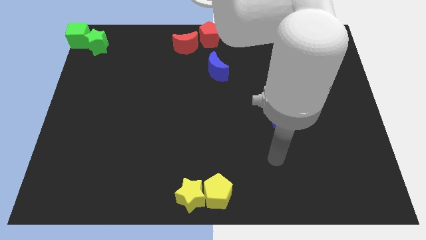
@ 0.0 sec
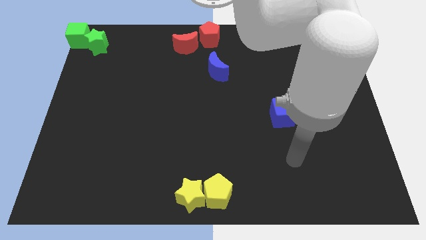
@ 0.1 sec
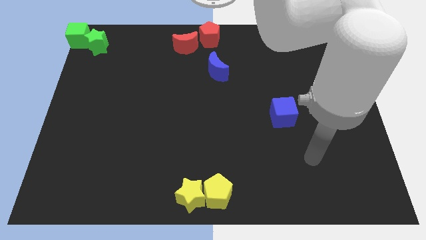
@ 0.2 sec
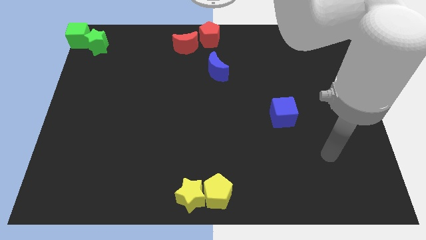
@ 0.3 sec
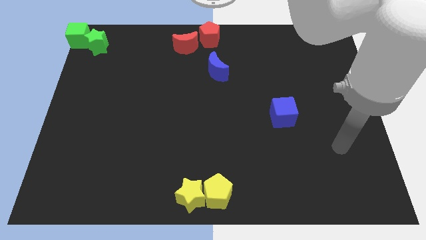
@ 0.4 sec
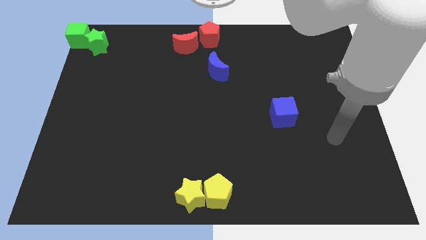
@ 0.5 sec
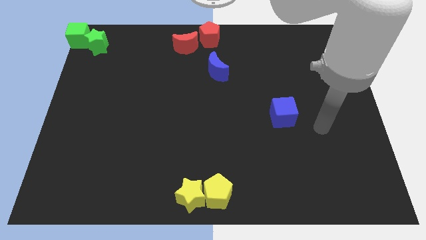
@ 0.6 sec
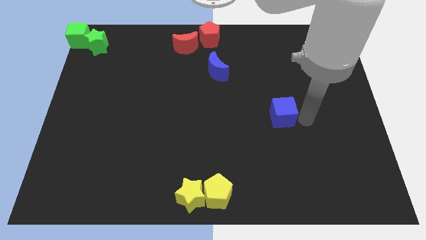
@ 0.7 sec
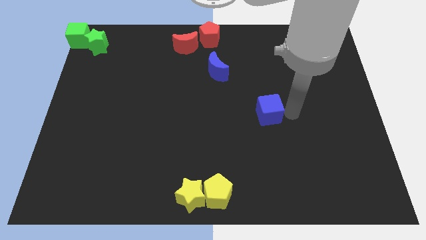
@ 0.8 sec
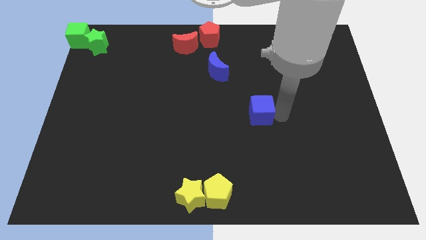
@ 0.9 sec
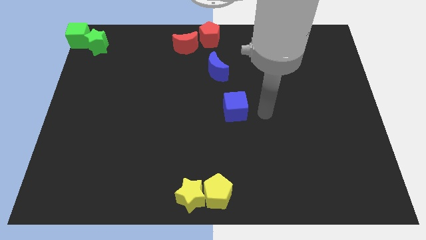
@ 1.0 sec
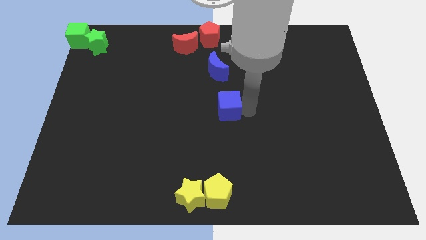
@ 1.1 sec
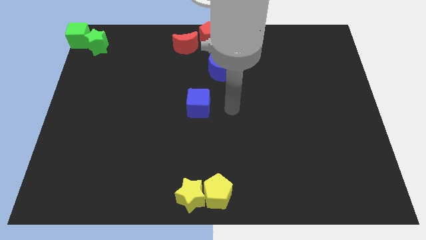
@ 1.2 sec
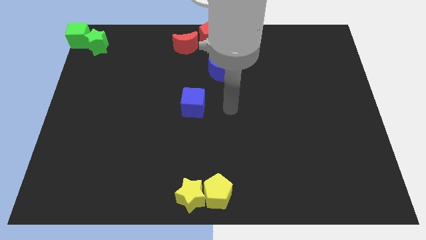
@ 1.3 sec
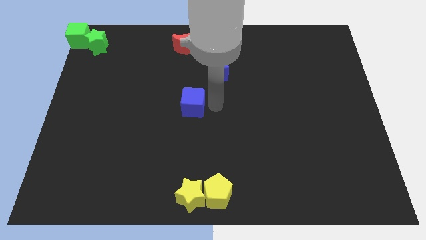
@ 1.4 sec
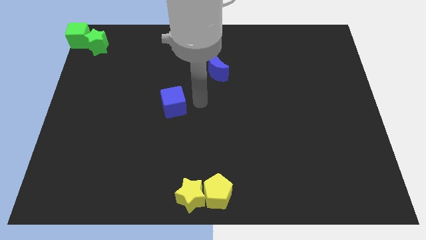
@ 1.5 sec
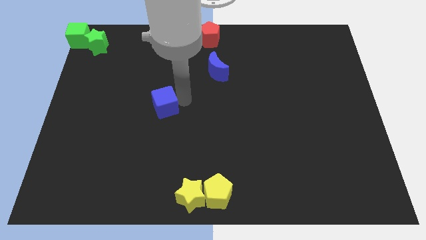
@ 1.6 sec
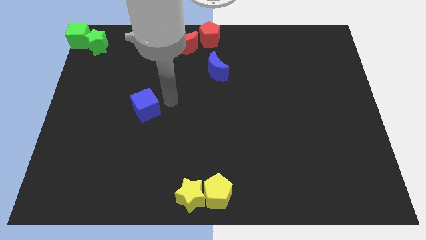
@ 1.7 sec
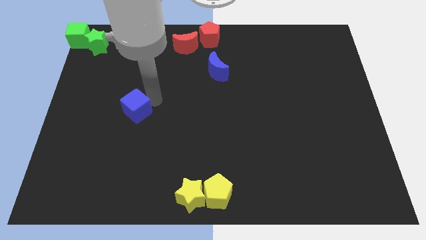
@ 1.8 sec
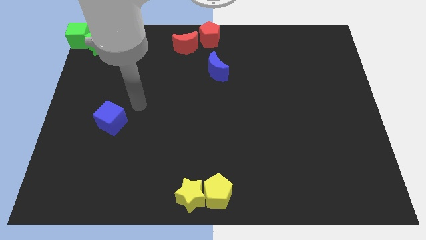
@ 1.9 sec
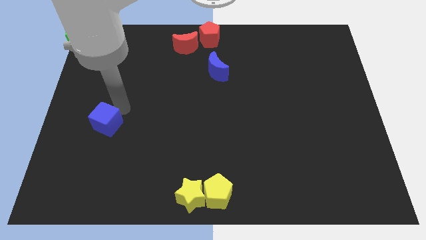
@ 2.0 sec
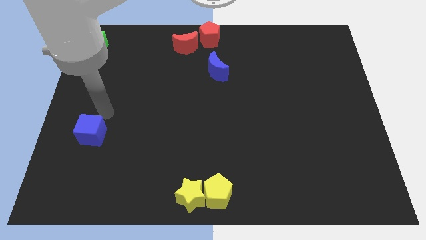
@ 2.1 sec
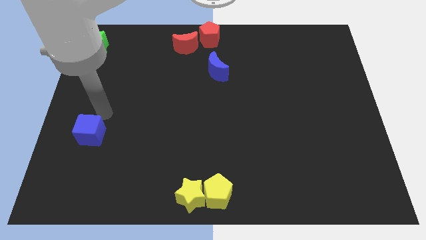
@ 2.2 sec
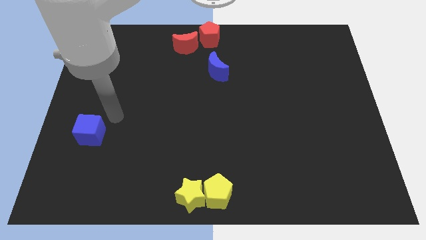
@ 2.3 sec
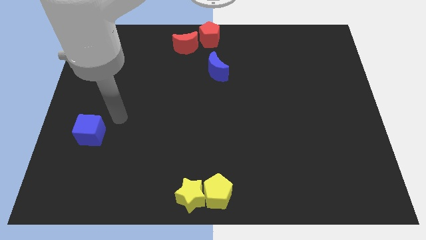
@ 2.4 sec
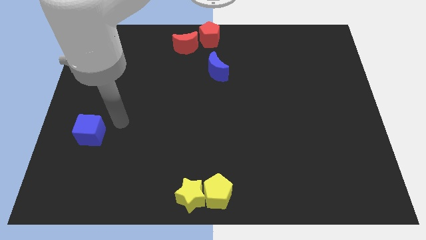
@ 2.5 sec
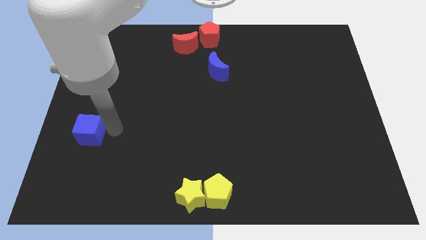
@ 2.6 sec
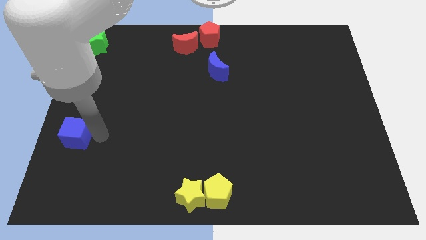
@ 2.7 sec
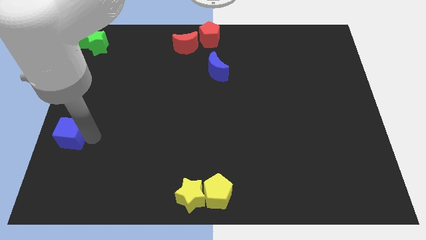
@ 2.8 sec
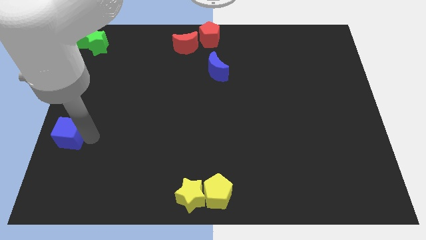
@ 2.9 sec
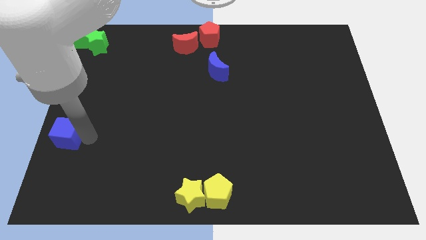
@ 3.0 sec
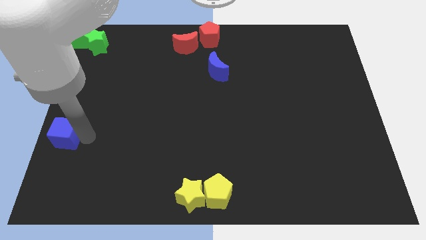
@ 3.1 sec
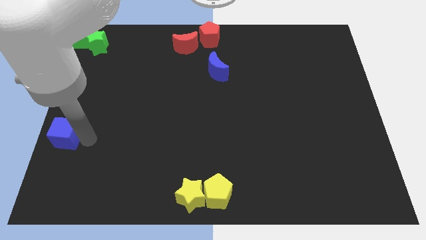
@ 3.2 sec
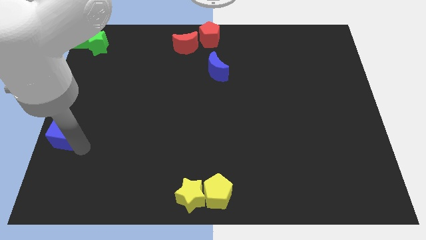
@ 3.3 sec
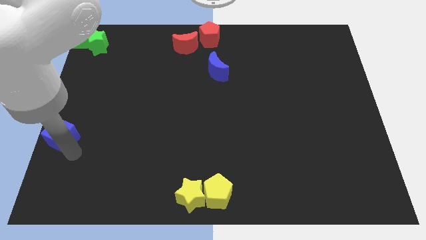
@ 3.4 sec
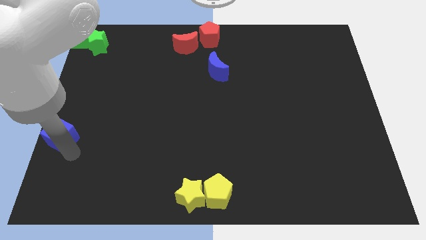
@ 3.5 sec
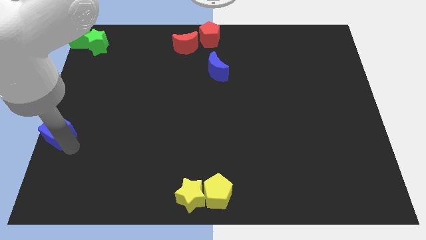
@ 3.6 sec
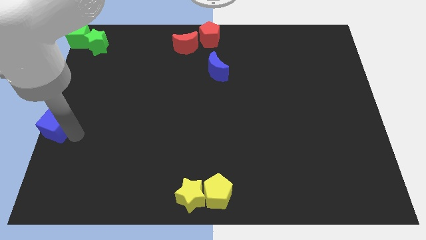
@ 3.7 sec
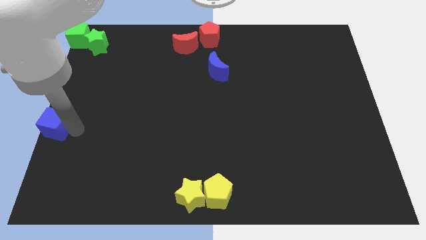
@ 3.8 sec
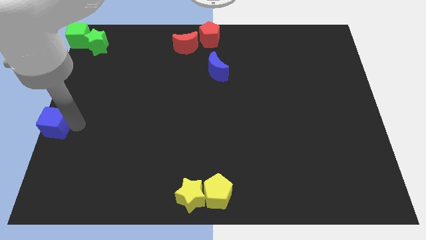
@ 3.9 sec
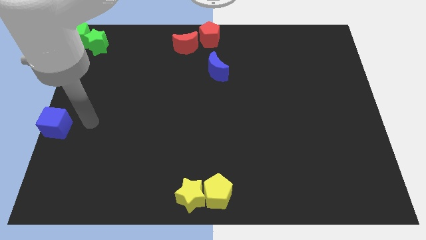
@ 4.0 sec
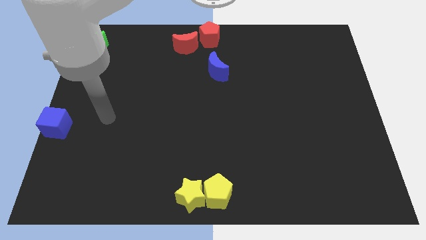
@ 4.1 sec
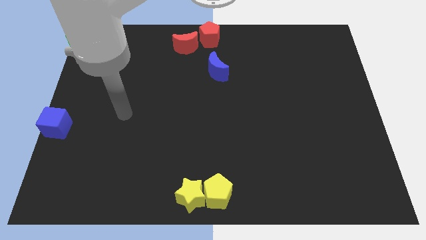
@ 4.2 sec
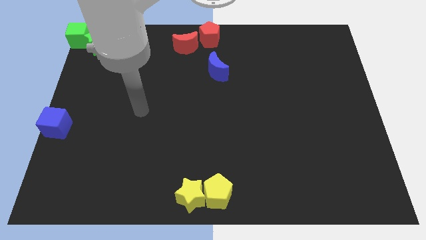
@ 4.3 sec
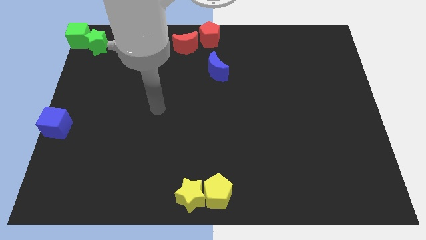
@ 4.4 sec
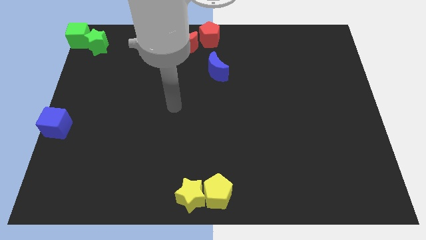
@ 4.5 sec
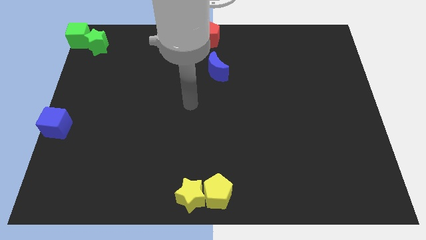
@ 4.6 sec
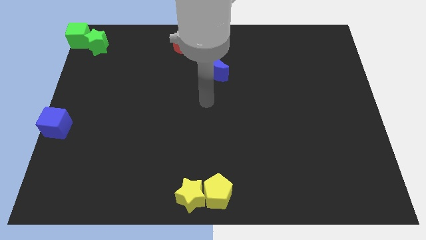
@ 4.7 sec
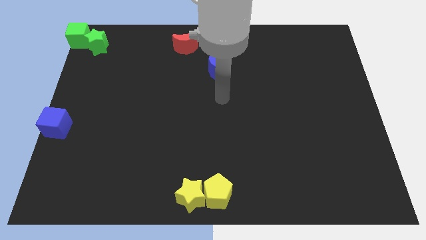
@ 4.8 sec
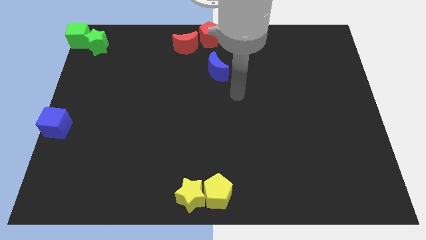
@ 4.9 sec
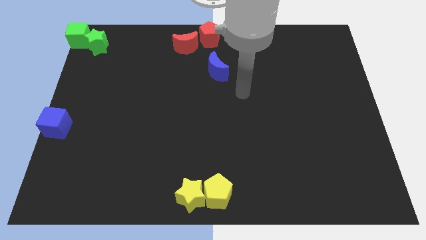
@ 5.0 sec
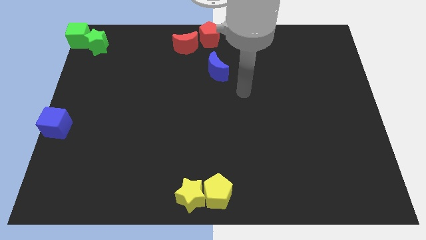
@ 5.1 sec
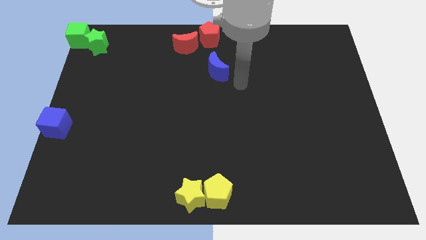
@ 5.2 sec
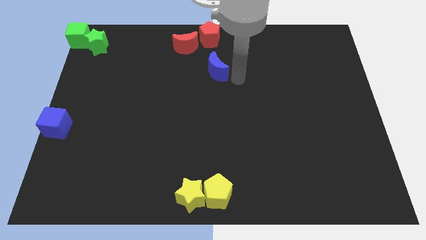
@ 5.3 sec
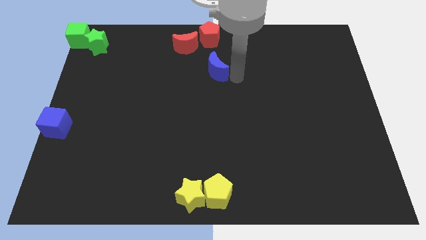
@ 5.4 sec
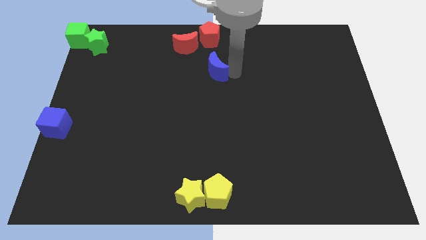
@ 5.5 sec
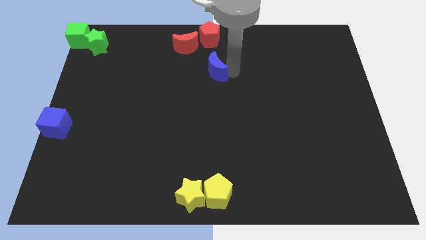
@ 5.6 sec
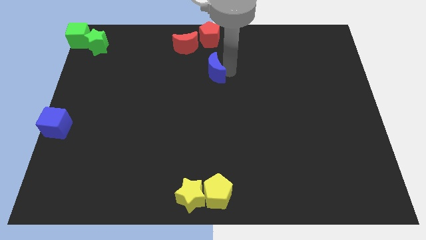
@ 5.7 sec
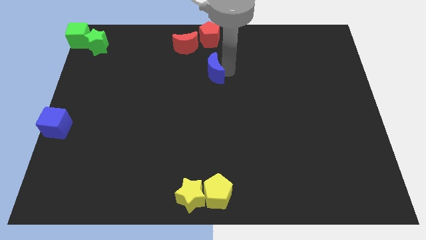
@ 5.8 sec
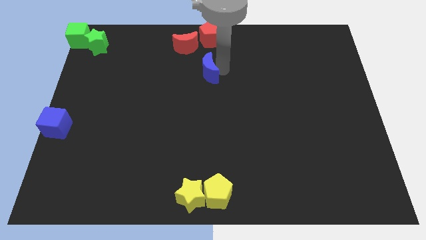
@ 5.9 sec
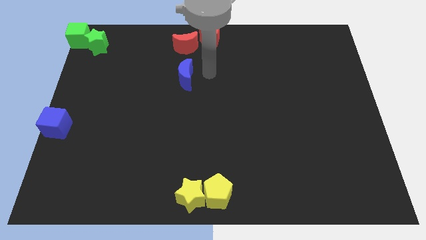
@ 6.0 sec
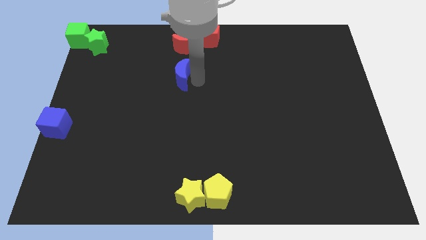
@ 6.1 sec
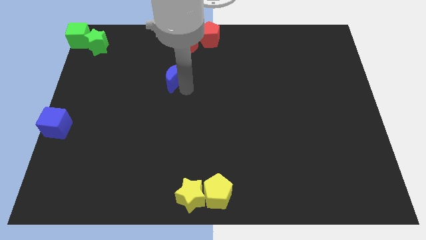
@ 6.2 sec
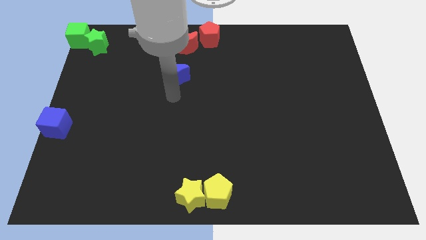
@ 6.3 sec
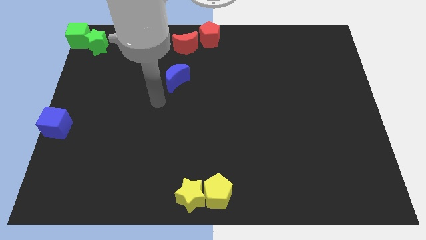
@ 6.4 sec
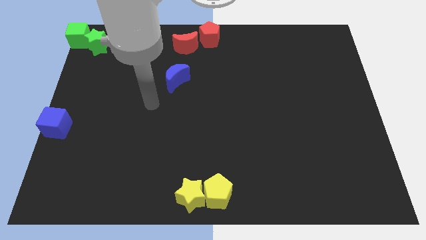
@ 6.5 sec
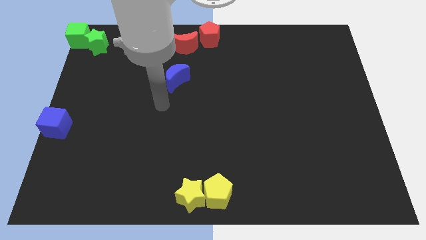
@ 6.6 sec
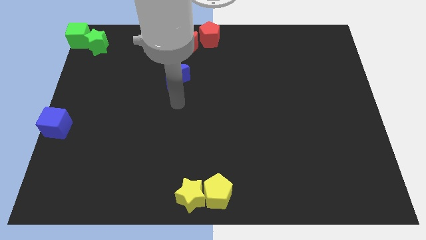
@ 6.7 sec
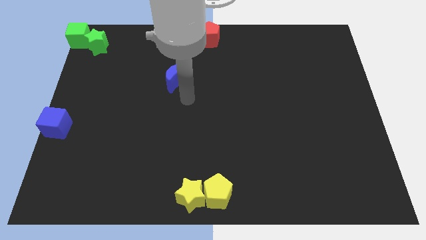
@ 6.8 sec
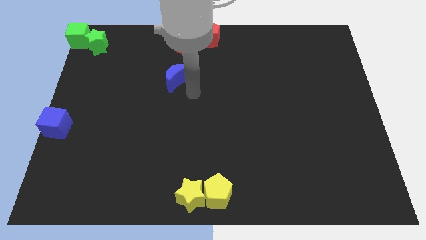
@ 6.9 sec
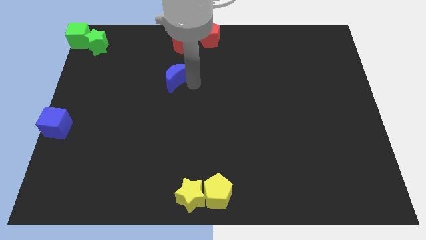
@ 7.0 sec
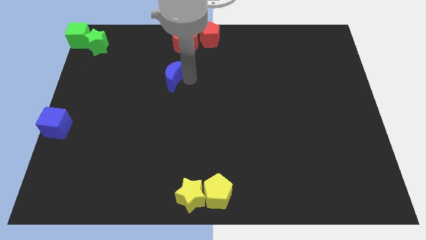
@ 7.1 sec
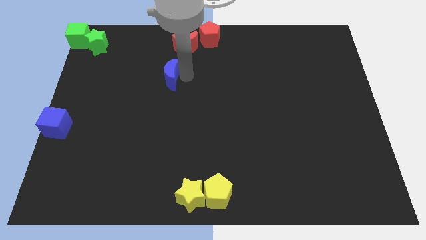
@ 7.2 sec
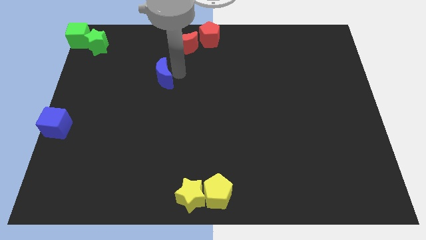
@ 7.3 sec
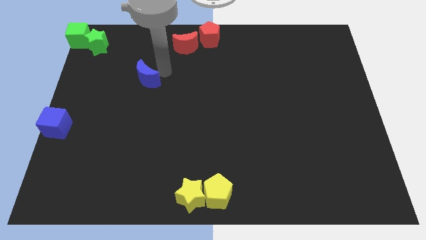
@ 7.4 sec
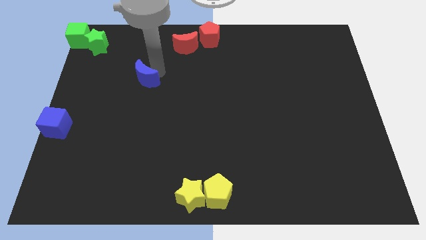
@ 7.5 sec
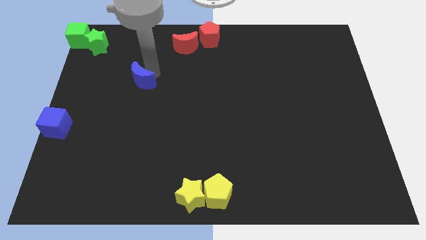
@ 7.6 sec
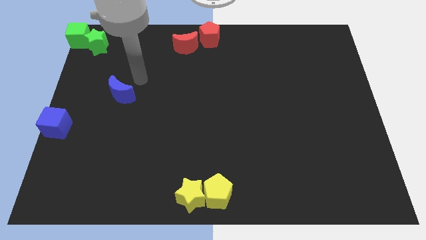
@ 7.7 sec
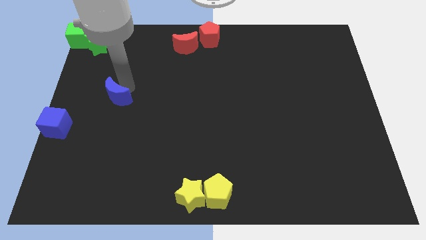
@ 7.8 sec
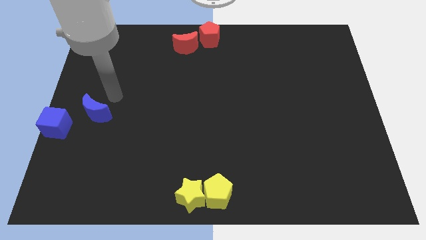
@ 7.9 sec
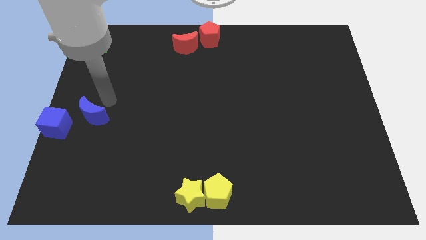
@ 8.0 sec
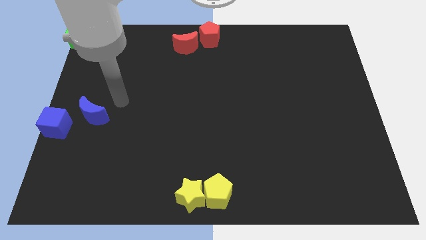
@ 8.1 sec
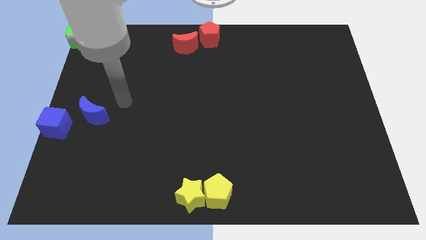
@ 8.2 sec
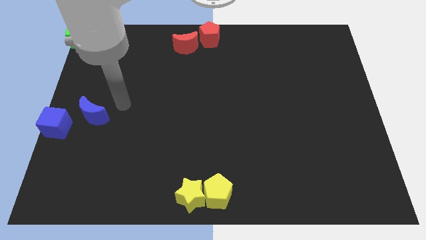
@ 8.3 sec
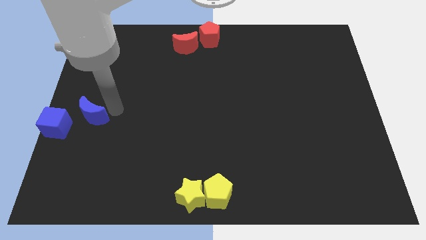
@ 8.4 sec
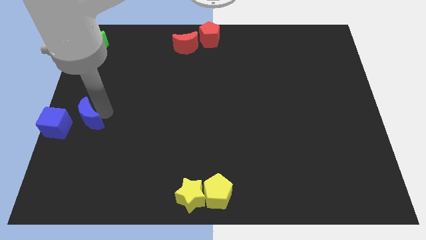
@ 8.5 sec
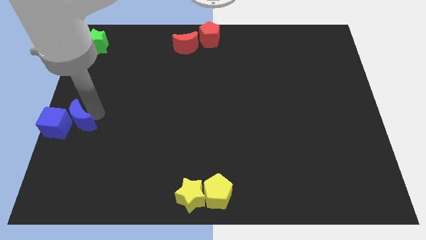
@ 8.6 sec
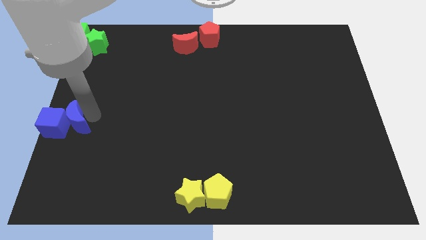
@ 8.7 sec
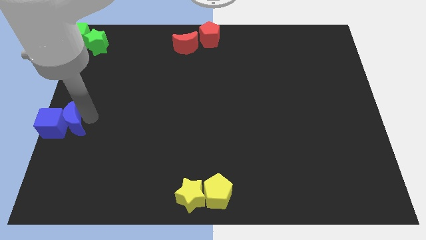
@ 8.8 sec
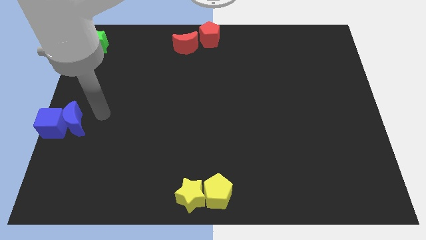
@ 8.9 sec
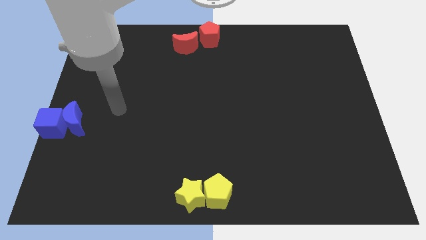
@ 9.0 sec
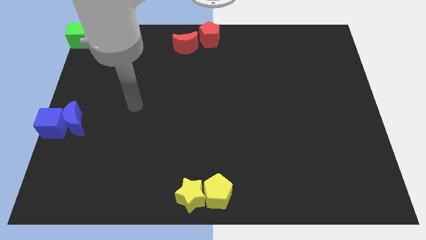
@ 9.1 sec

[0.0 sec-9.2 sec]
move two blue colored objects towards left corner of the board
